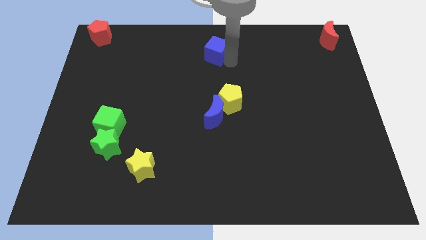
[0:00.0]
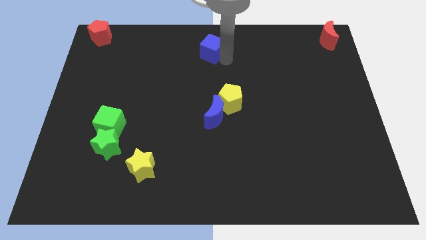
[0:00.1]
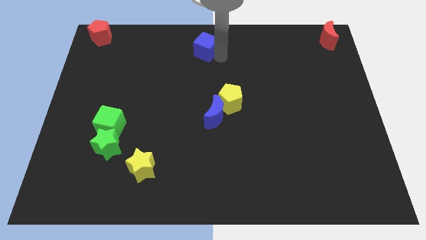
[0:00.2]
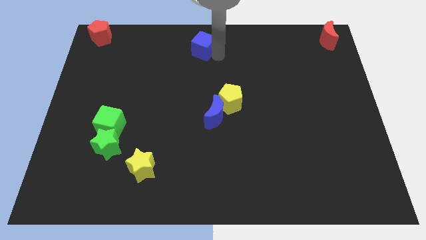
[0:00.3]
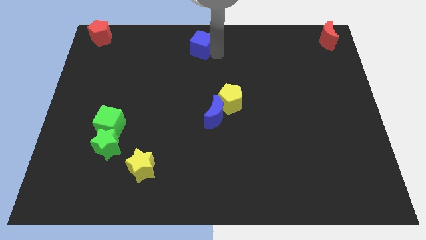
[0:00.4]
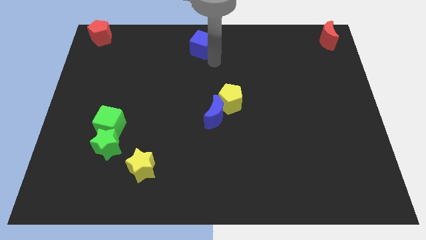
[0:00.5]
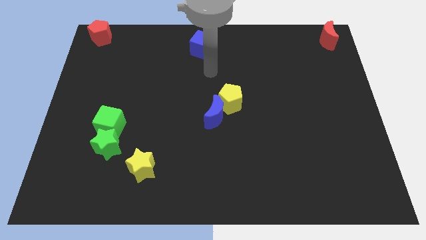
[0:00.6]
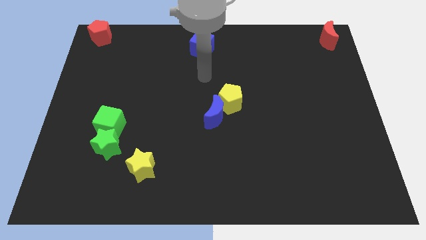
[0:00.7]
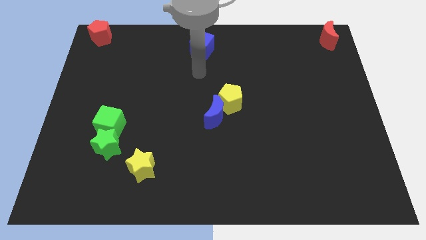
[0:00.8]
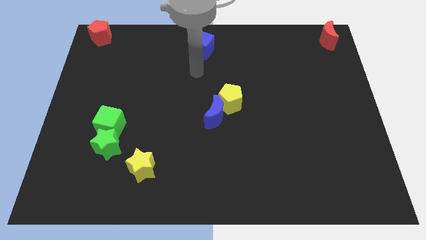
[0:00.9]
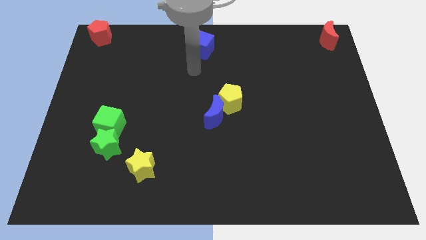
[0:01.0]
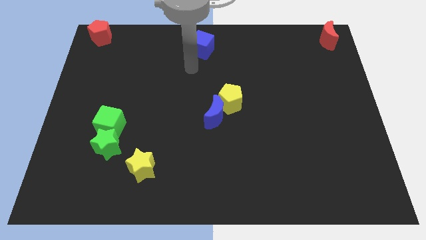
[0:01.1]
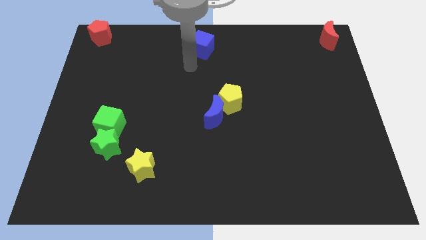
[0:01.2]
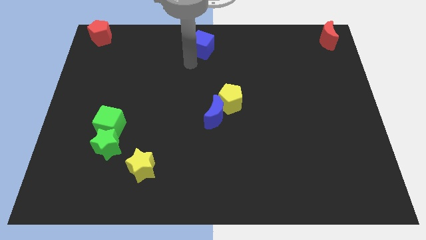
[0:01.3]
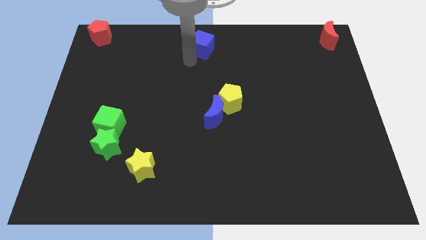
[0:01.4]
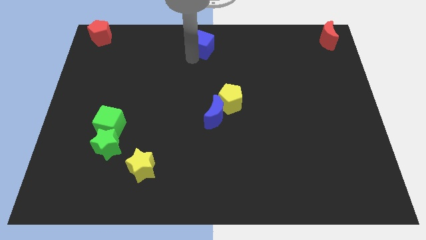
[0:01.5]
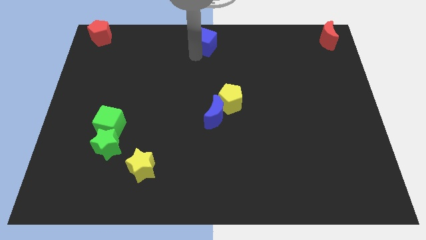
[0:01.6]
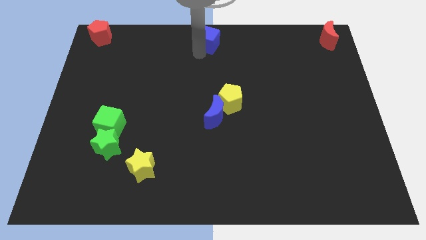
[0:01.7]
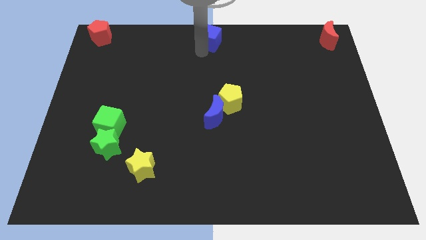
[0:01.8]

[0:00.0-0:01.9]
push the blue cube to the top center of the board

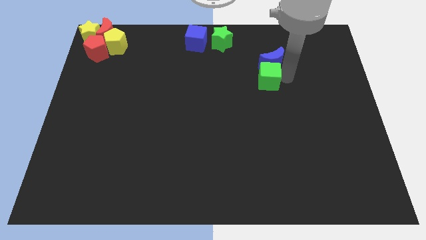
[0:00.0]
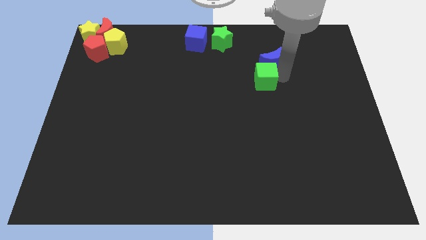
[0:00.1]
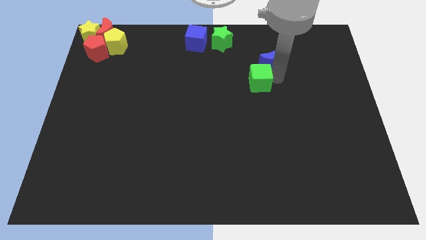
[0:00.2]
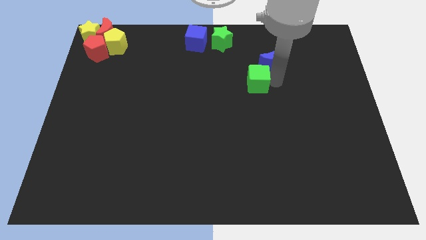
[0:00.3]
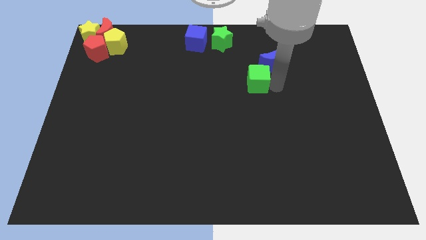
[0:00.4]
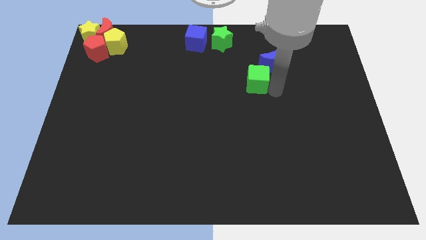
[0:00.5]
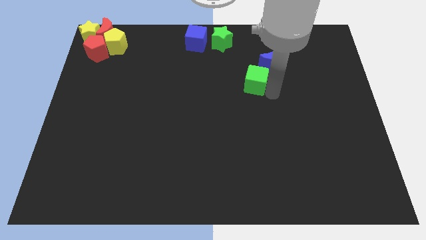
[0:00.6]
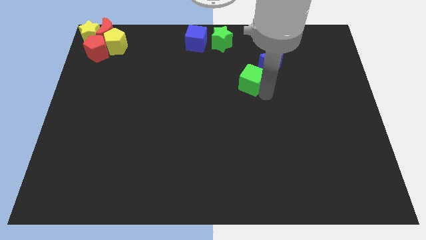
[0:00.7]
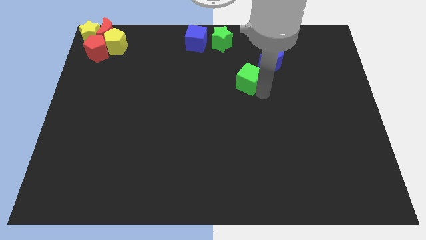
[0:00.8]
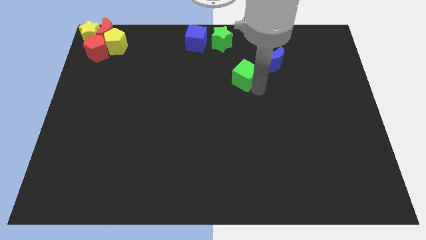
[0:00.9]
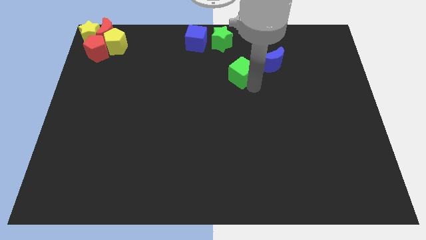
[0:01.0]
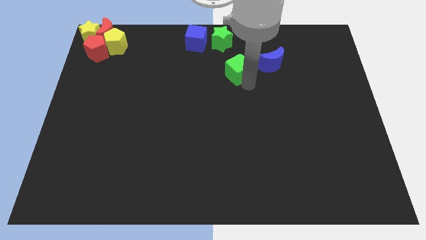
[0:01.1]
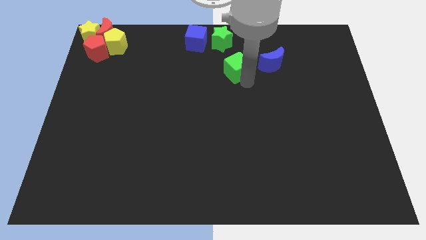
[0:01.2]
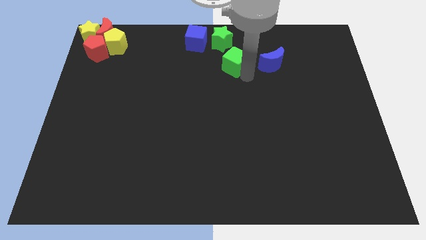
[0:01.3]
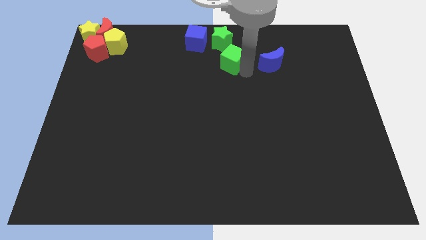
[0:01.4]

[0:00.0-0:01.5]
slightly push the green cube towards the green star

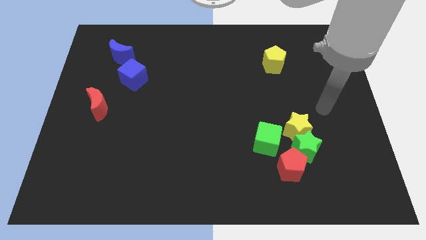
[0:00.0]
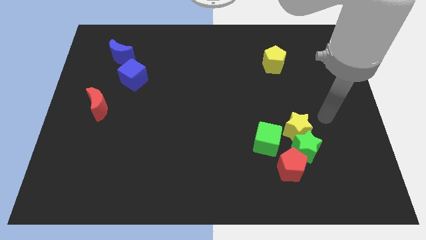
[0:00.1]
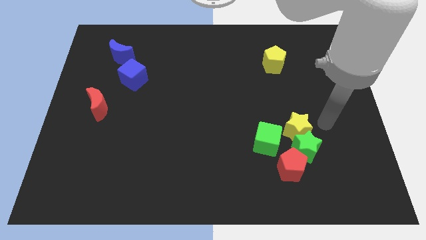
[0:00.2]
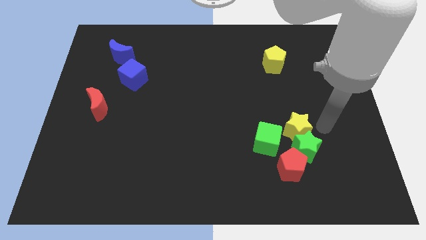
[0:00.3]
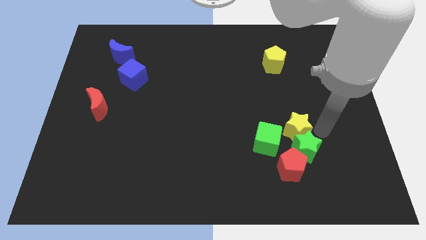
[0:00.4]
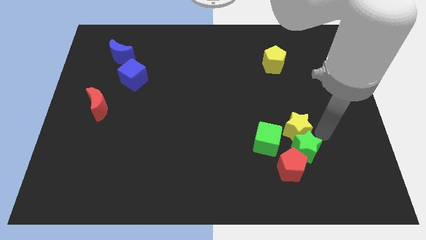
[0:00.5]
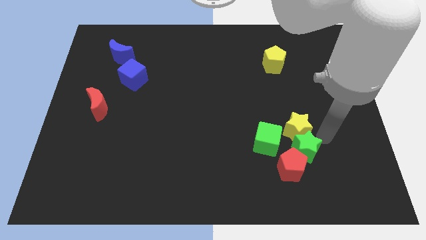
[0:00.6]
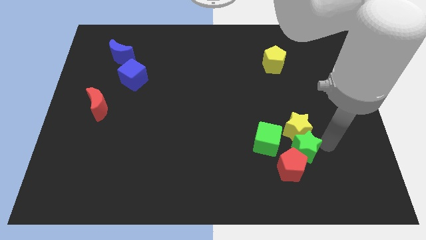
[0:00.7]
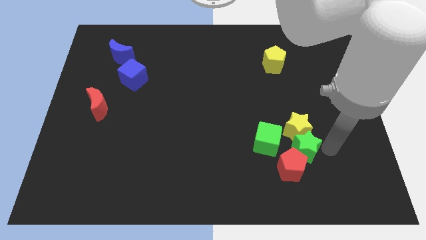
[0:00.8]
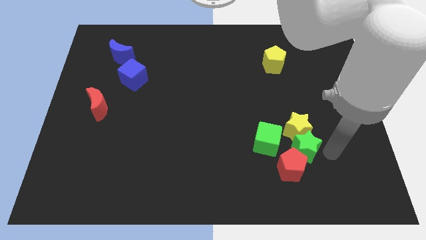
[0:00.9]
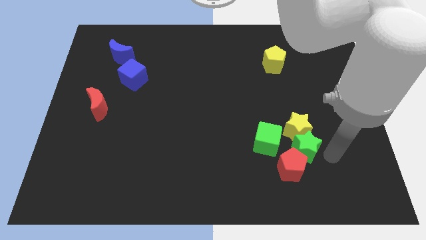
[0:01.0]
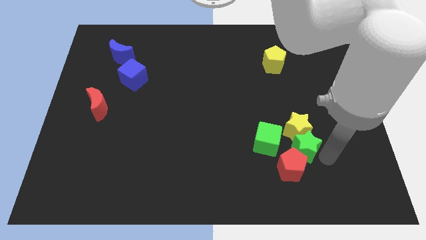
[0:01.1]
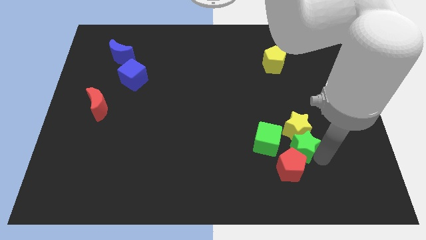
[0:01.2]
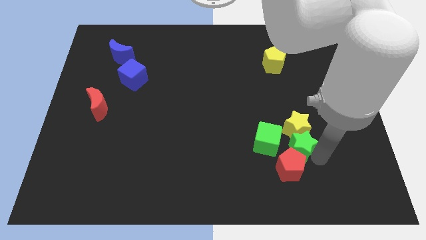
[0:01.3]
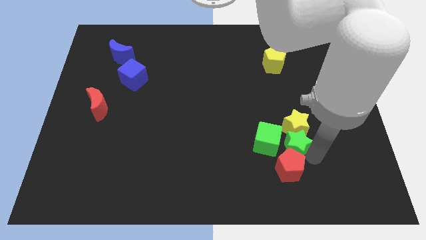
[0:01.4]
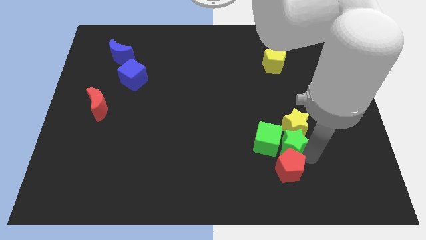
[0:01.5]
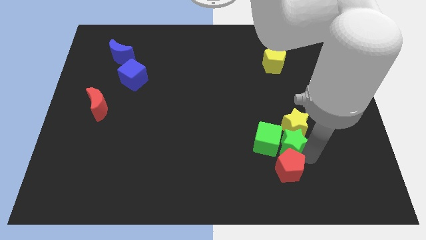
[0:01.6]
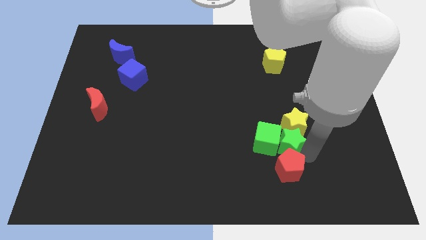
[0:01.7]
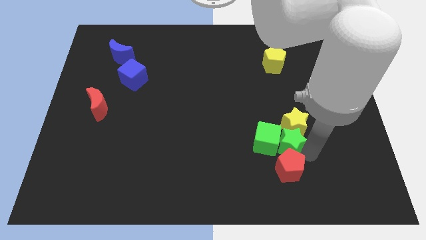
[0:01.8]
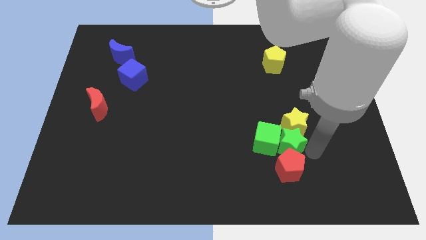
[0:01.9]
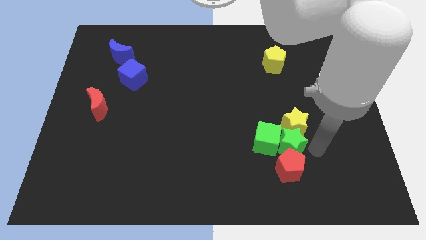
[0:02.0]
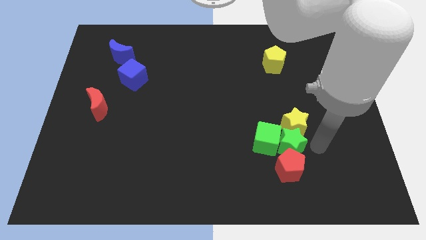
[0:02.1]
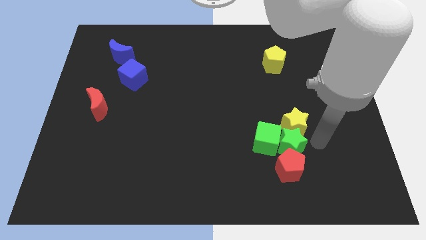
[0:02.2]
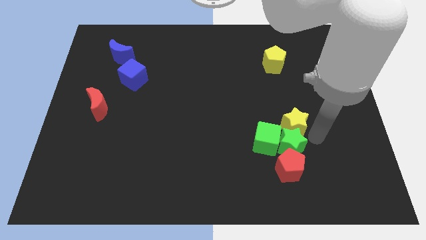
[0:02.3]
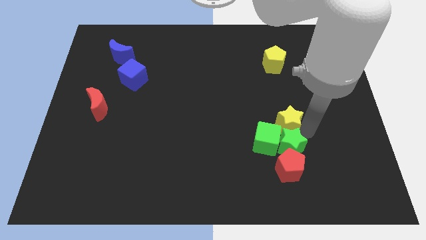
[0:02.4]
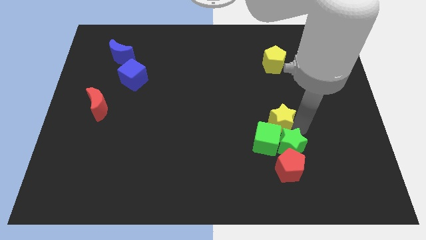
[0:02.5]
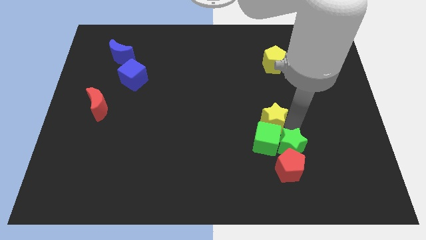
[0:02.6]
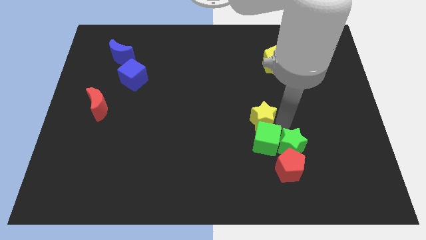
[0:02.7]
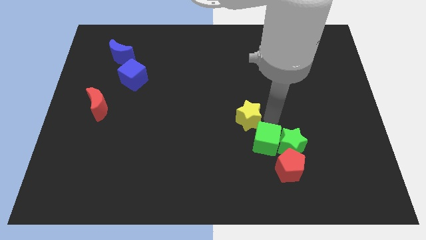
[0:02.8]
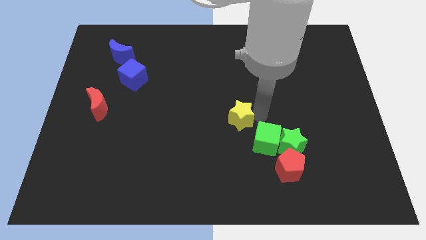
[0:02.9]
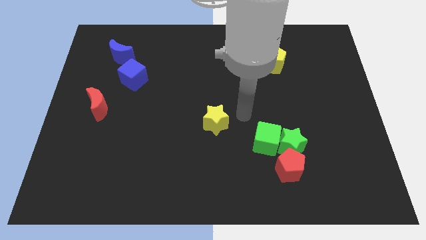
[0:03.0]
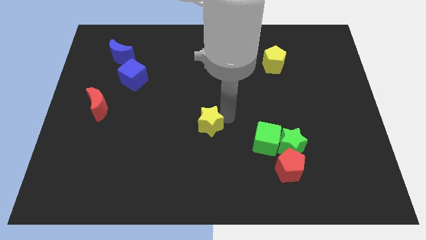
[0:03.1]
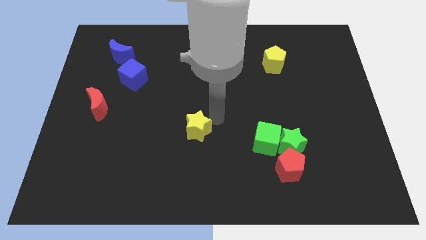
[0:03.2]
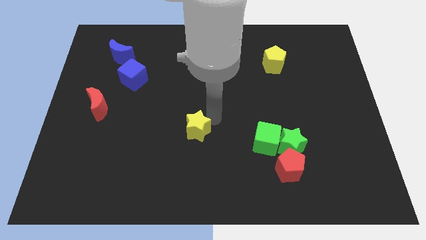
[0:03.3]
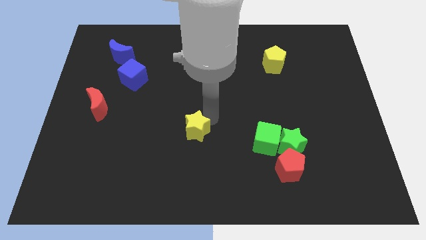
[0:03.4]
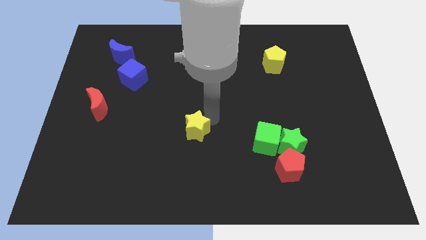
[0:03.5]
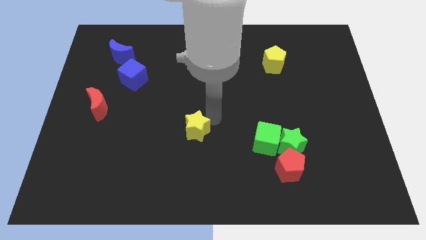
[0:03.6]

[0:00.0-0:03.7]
drag the yellow star towards the center of the board

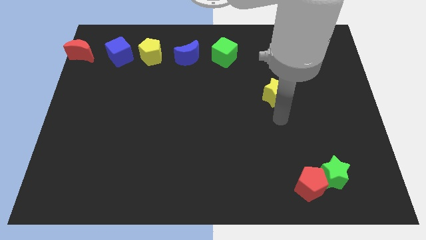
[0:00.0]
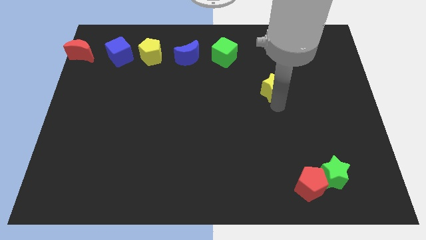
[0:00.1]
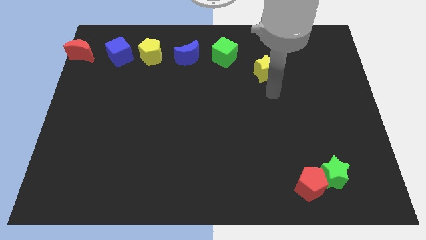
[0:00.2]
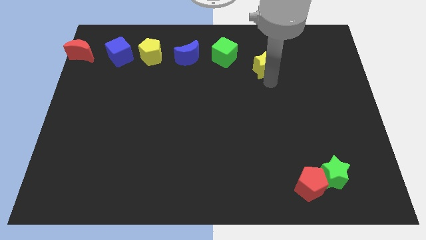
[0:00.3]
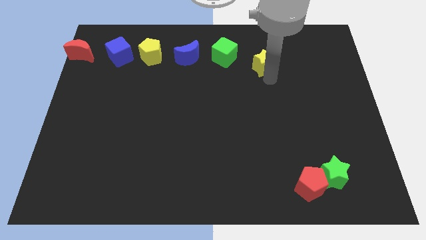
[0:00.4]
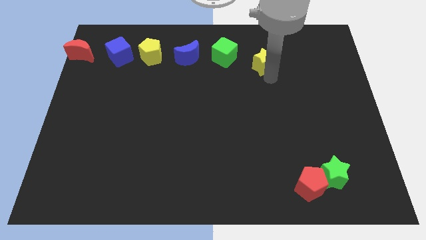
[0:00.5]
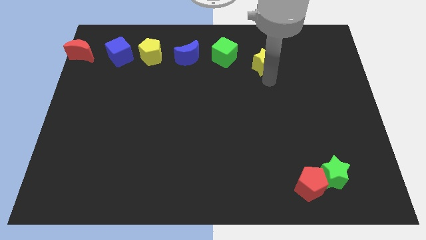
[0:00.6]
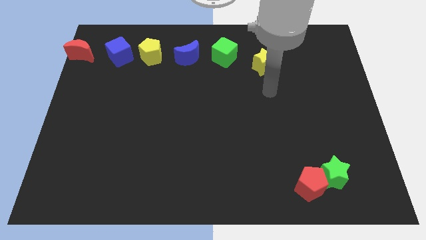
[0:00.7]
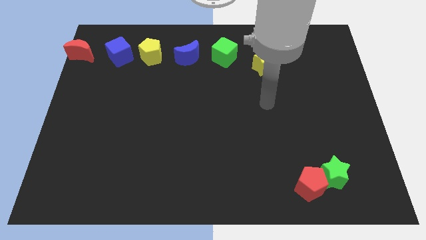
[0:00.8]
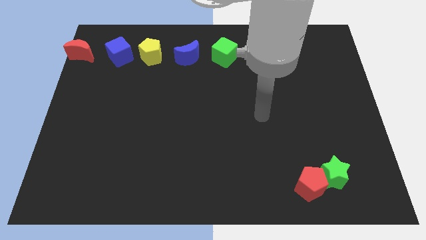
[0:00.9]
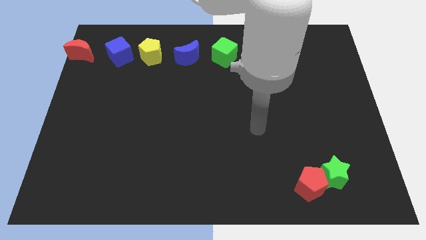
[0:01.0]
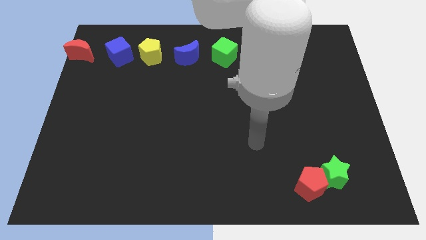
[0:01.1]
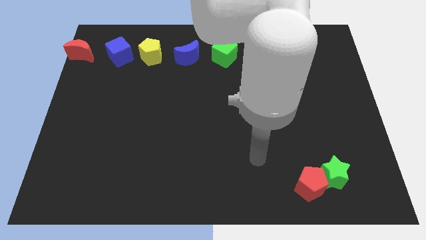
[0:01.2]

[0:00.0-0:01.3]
move the yellow star towards up a bit

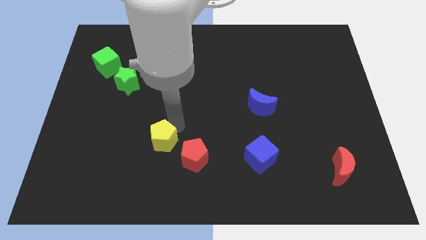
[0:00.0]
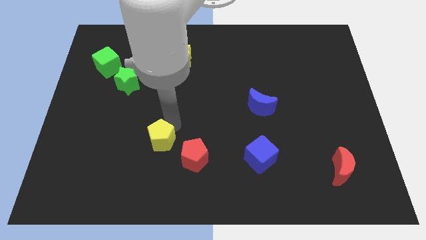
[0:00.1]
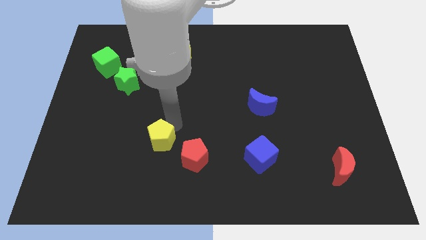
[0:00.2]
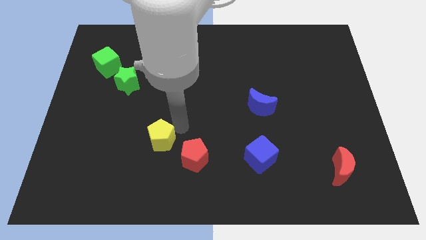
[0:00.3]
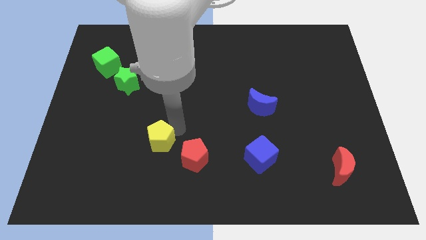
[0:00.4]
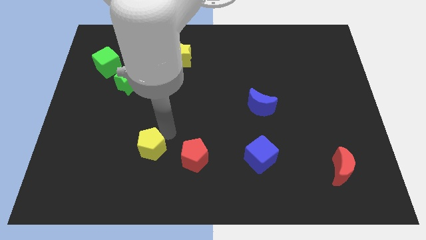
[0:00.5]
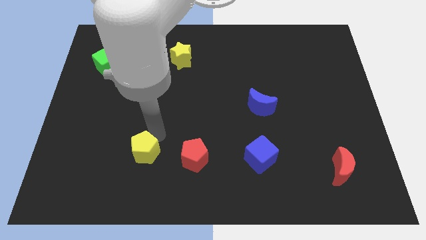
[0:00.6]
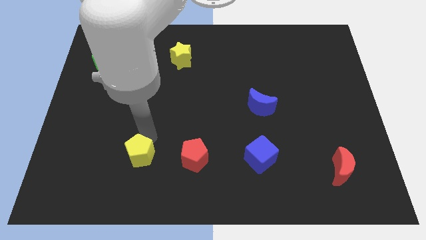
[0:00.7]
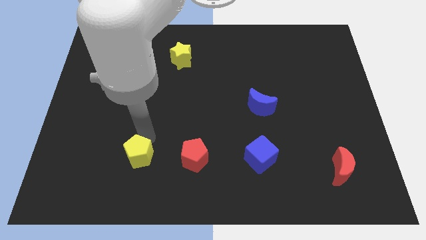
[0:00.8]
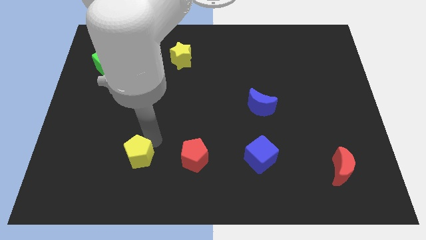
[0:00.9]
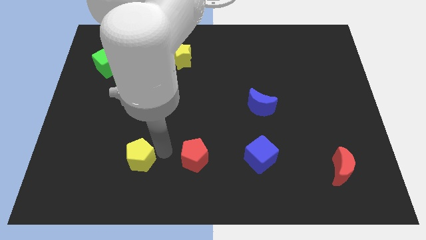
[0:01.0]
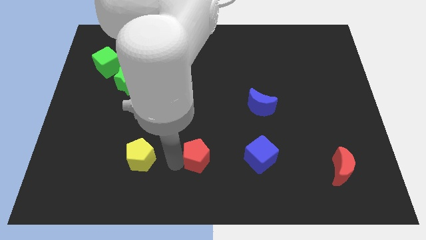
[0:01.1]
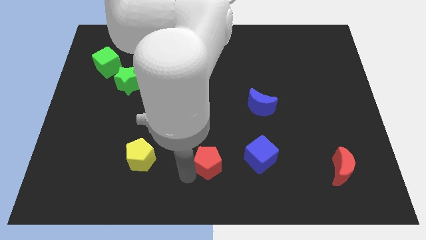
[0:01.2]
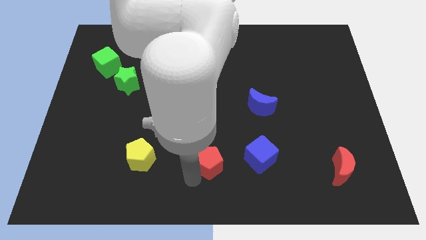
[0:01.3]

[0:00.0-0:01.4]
adjust both the pentagons horizontally to the left side of the blue cube
